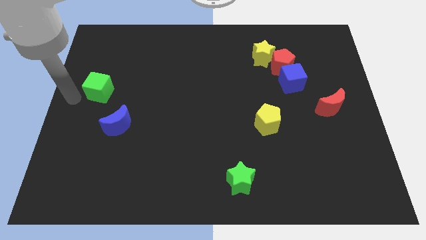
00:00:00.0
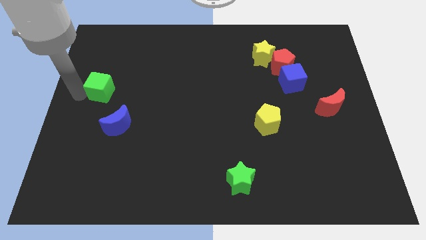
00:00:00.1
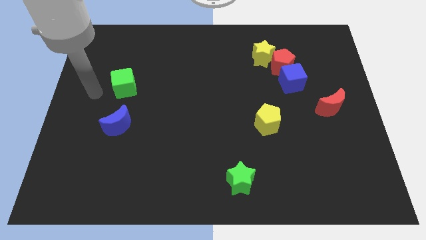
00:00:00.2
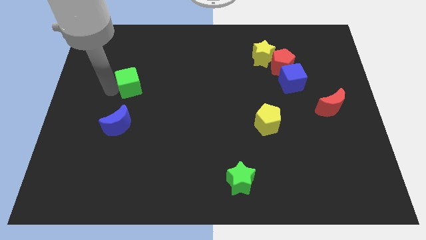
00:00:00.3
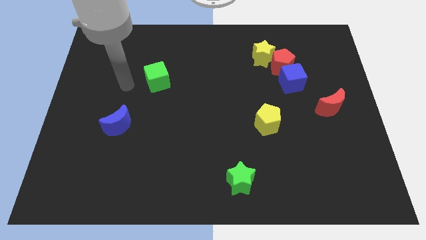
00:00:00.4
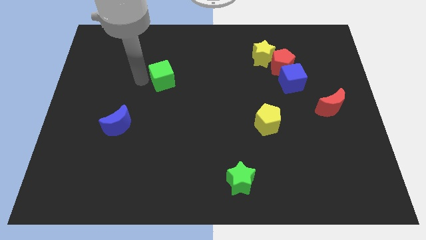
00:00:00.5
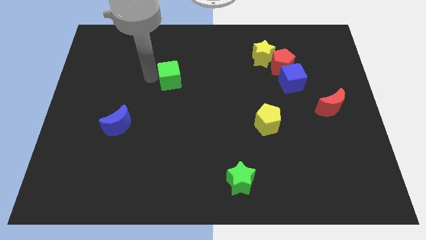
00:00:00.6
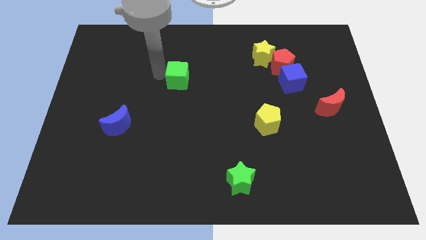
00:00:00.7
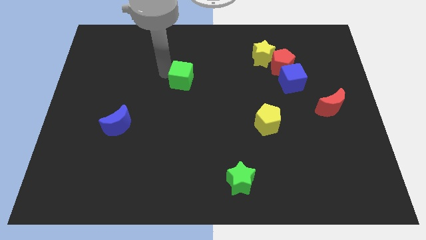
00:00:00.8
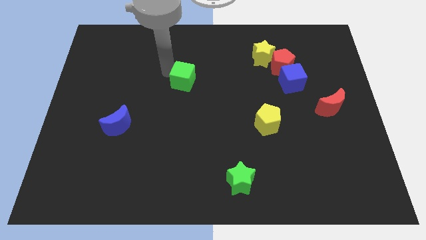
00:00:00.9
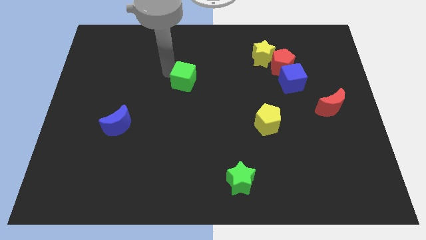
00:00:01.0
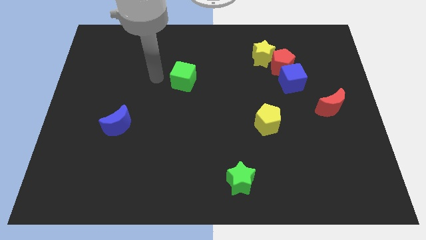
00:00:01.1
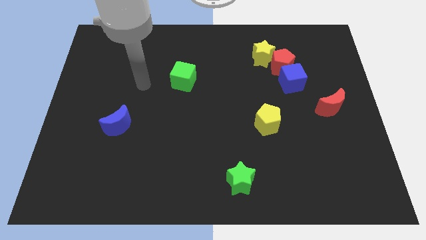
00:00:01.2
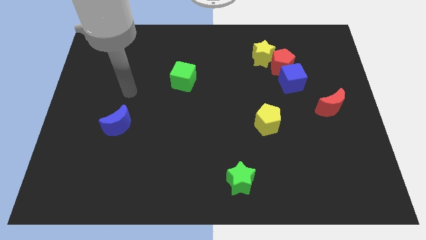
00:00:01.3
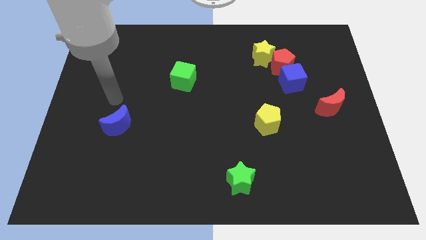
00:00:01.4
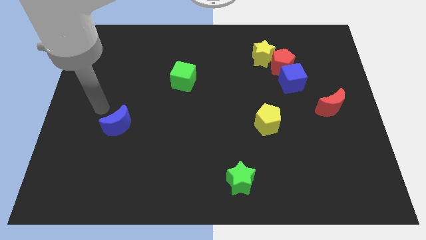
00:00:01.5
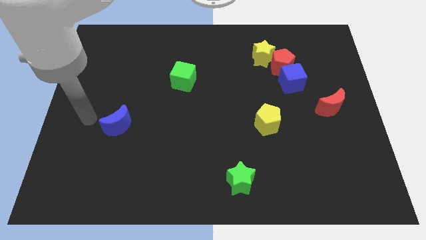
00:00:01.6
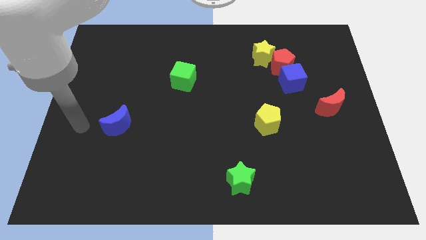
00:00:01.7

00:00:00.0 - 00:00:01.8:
push the green cube to the right side

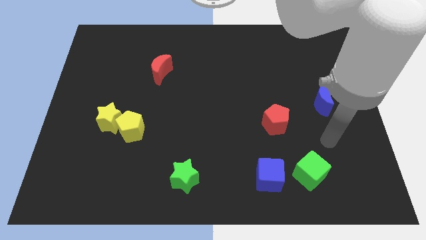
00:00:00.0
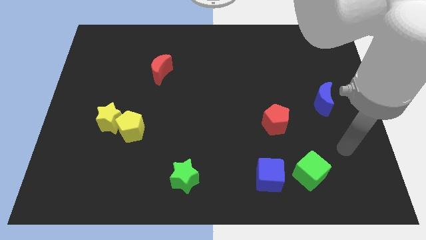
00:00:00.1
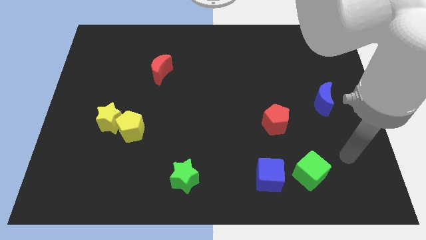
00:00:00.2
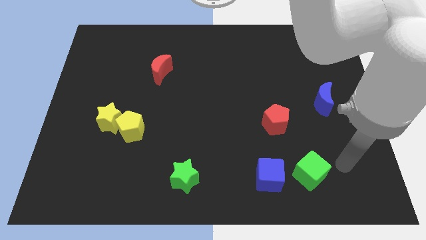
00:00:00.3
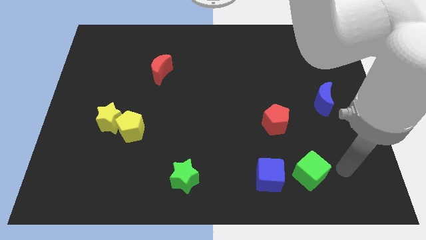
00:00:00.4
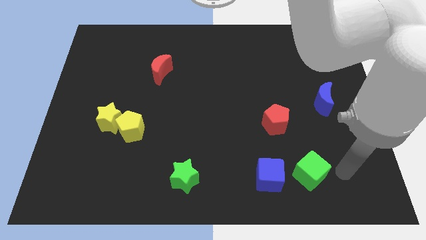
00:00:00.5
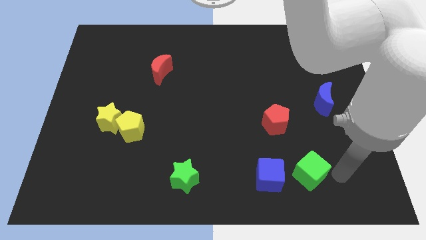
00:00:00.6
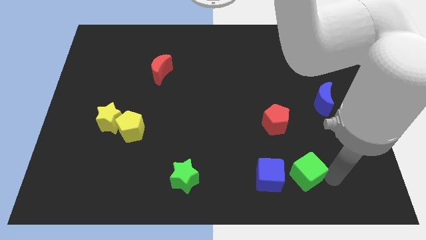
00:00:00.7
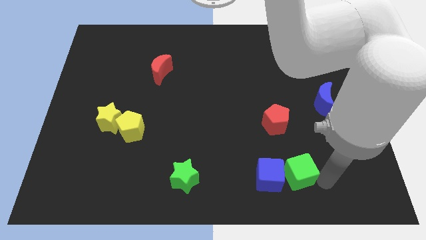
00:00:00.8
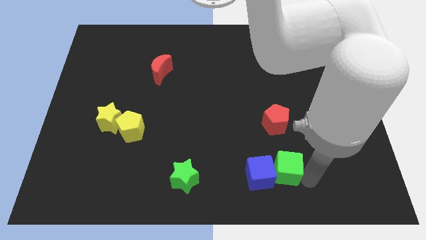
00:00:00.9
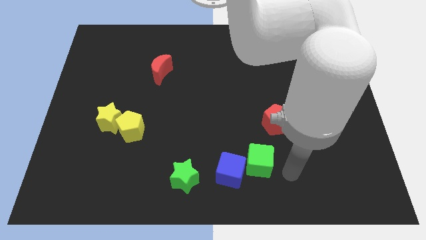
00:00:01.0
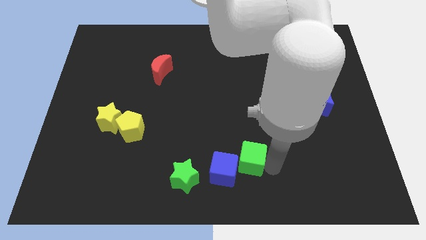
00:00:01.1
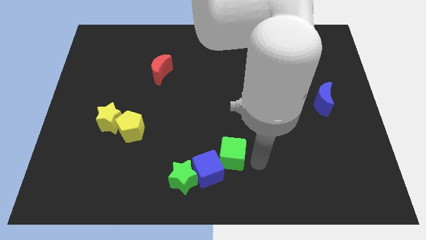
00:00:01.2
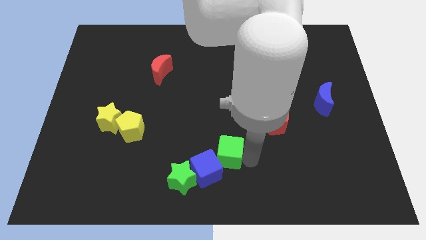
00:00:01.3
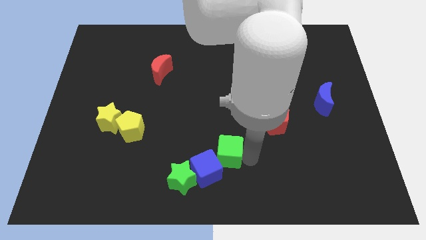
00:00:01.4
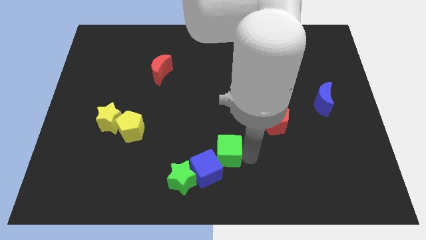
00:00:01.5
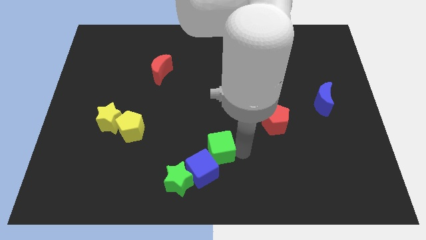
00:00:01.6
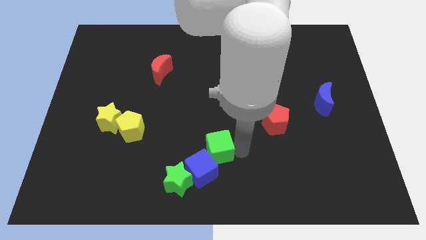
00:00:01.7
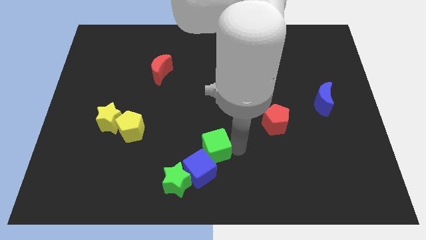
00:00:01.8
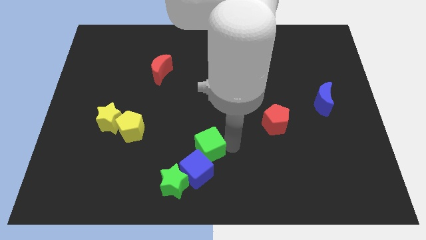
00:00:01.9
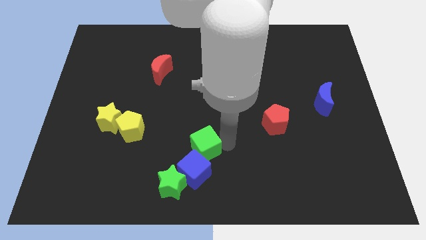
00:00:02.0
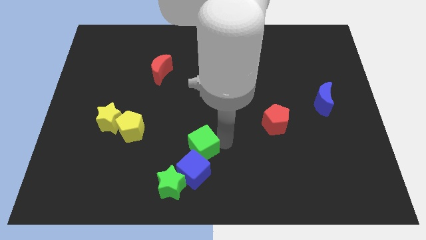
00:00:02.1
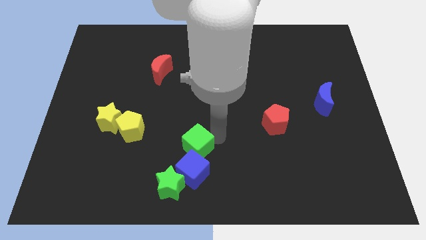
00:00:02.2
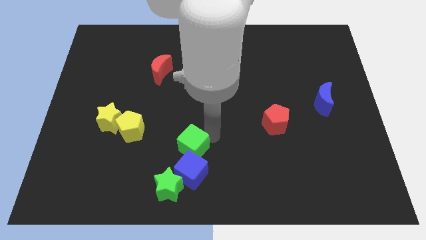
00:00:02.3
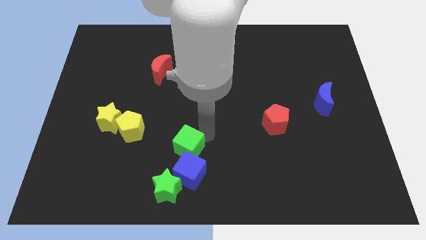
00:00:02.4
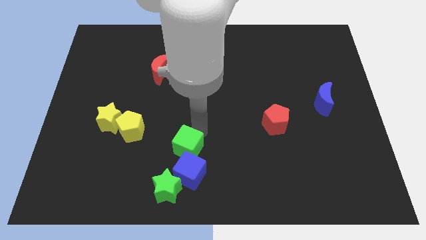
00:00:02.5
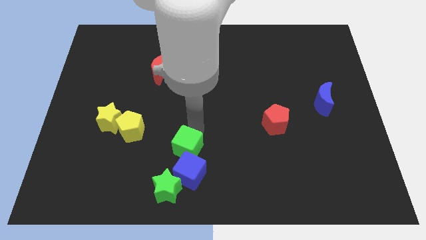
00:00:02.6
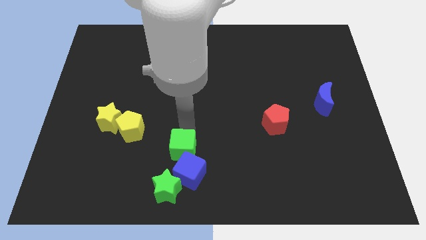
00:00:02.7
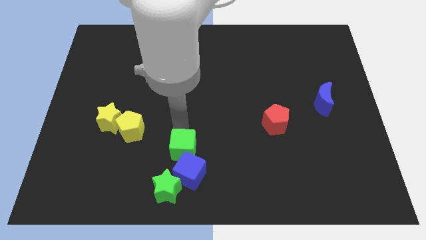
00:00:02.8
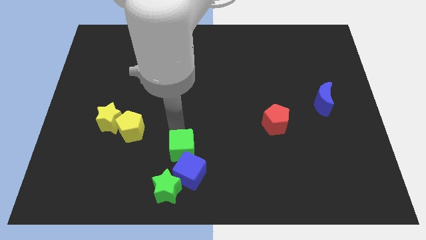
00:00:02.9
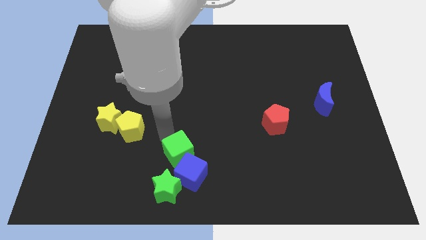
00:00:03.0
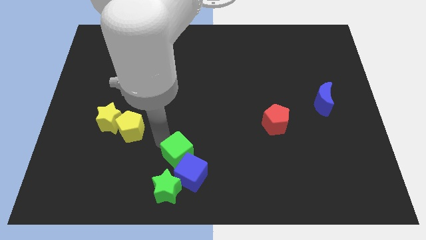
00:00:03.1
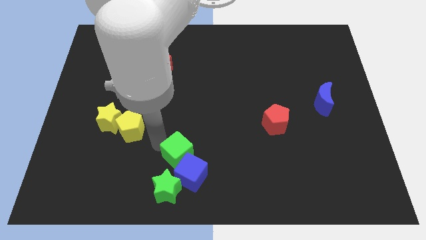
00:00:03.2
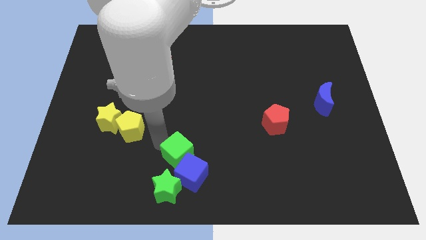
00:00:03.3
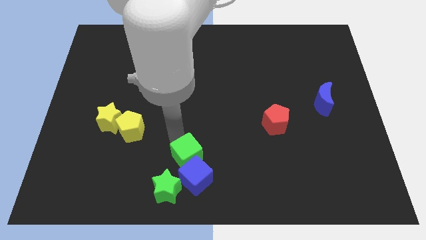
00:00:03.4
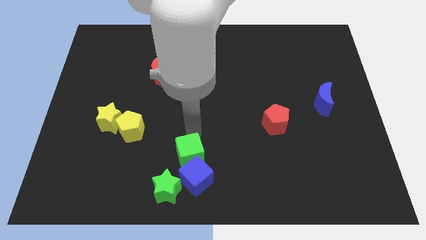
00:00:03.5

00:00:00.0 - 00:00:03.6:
push the green cube into the blue cube

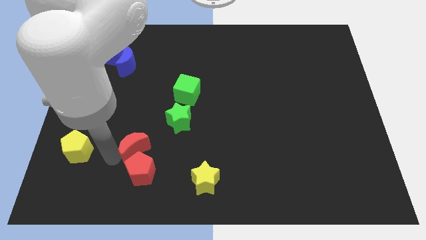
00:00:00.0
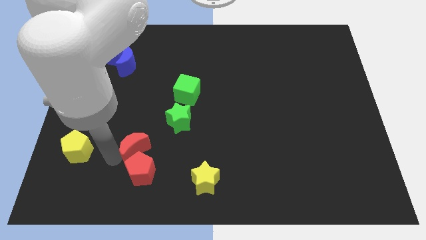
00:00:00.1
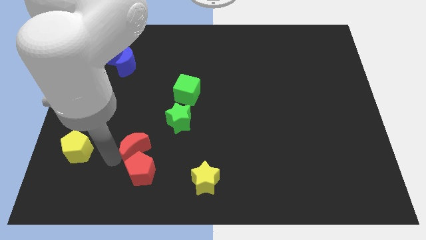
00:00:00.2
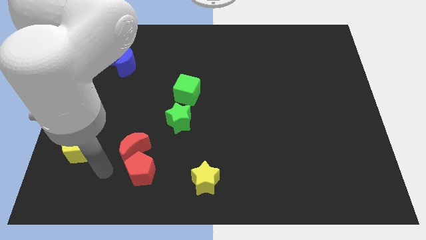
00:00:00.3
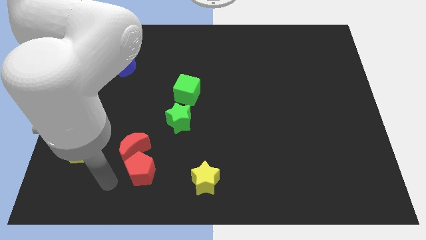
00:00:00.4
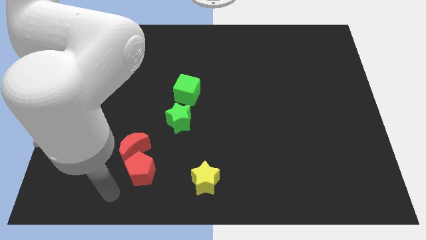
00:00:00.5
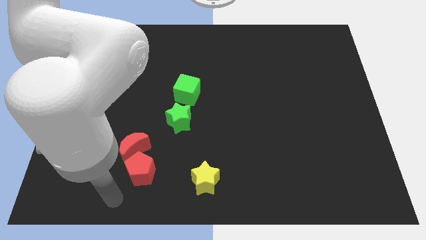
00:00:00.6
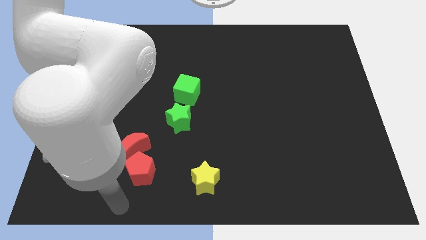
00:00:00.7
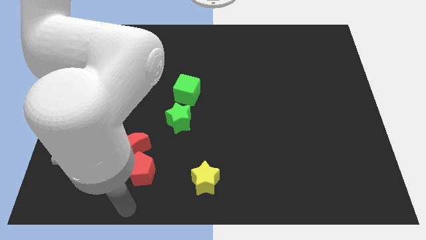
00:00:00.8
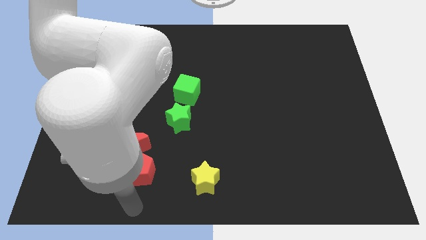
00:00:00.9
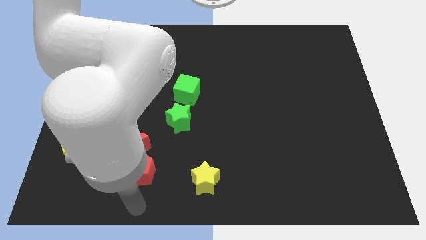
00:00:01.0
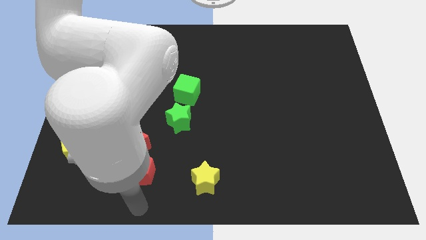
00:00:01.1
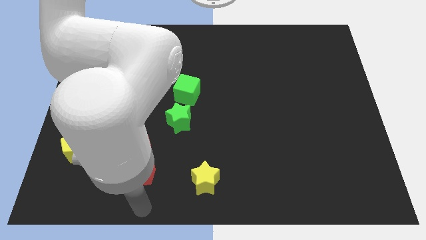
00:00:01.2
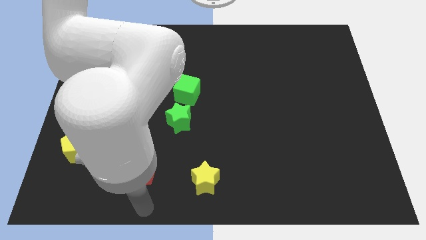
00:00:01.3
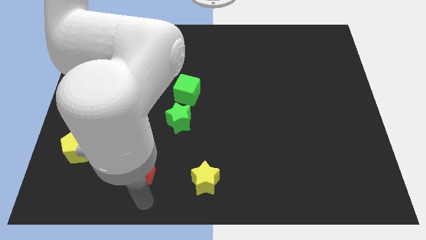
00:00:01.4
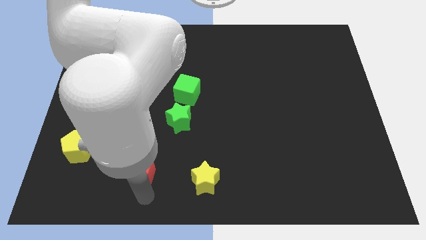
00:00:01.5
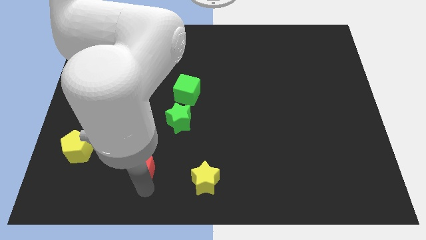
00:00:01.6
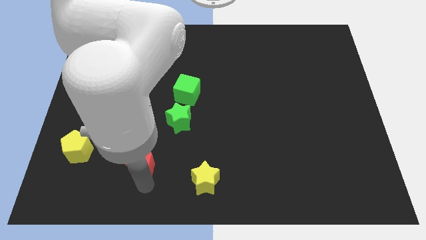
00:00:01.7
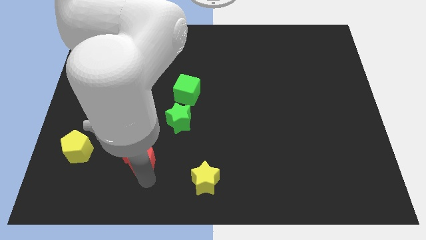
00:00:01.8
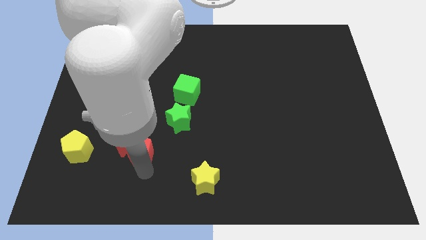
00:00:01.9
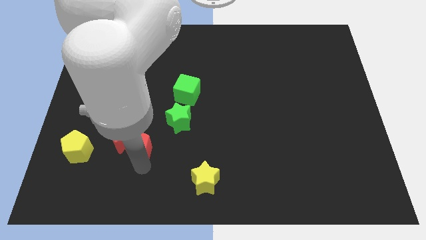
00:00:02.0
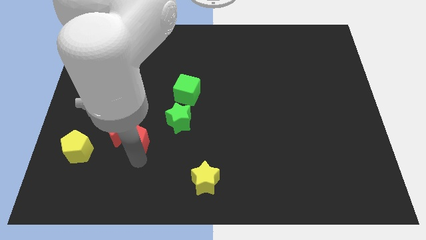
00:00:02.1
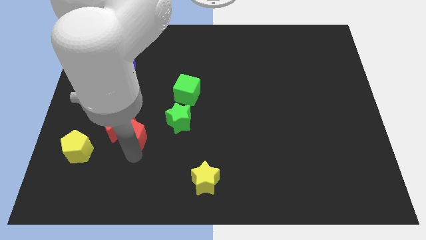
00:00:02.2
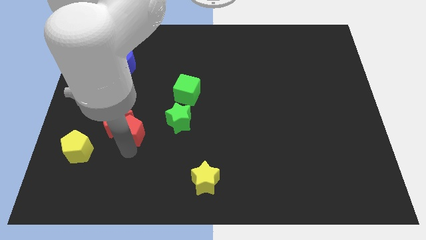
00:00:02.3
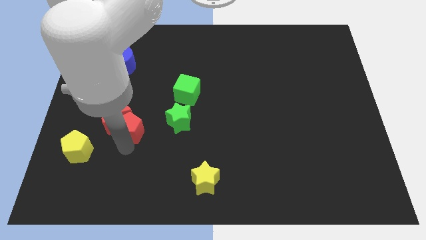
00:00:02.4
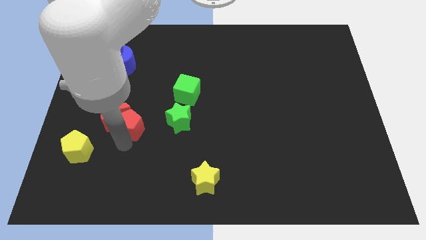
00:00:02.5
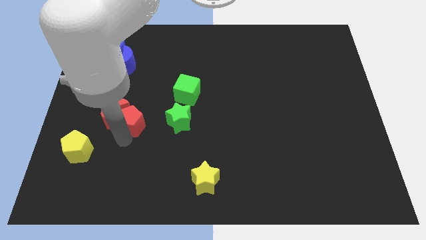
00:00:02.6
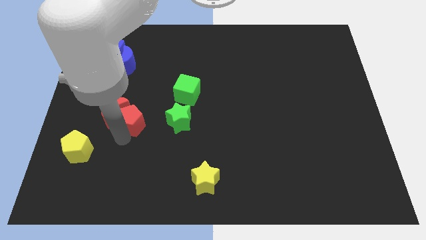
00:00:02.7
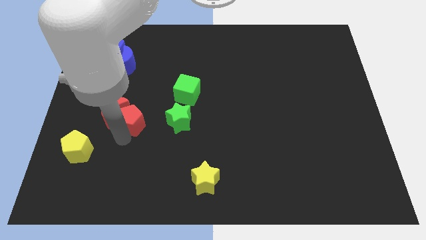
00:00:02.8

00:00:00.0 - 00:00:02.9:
slide the red pentagon parallel left of the green star

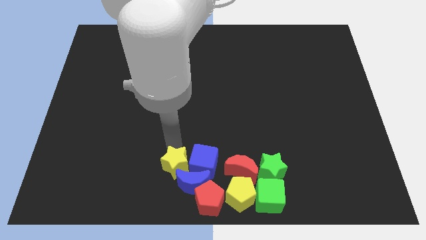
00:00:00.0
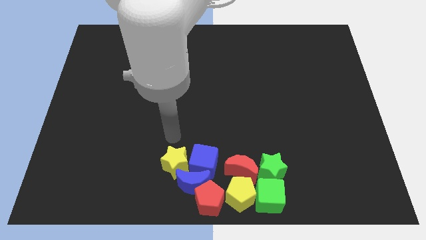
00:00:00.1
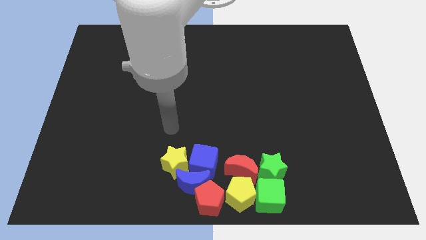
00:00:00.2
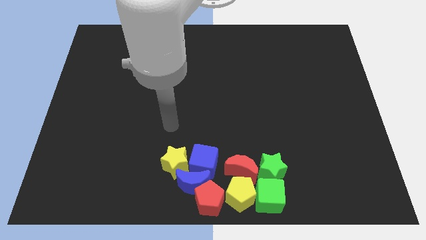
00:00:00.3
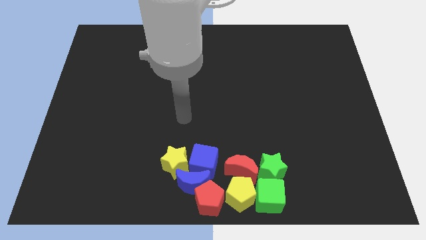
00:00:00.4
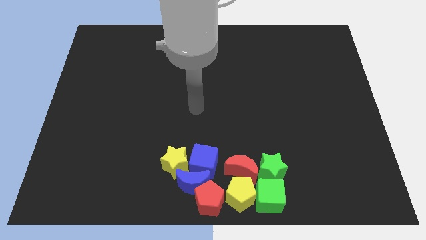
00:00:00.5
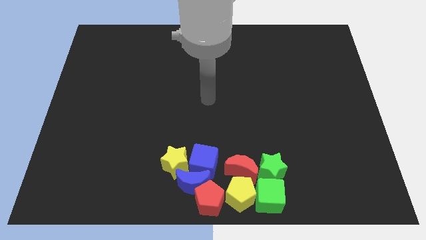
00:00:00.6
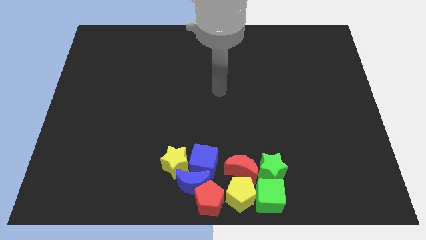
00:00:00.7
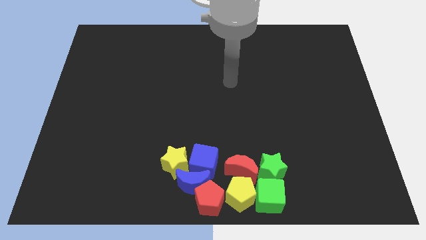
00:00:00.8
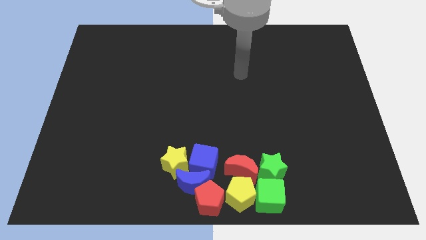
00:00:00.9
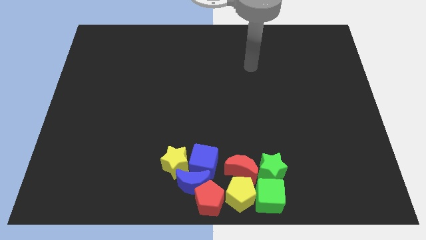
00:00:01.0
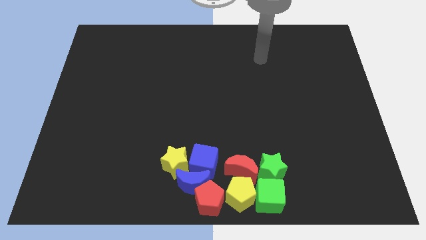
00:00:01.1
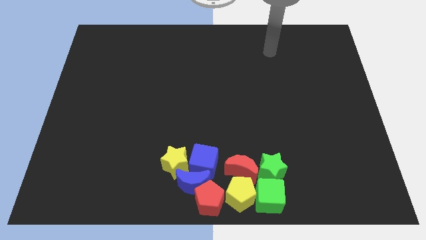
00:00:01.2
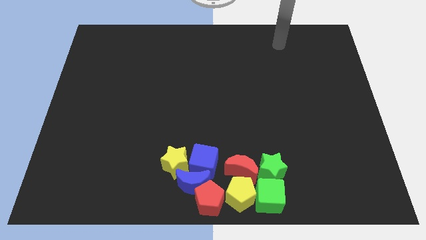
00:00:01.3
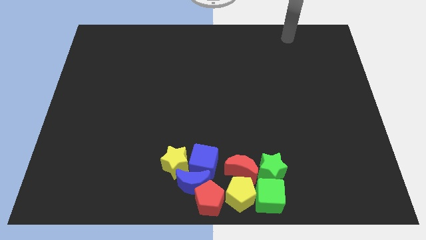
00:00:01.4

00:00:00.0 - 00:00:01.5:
slide your hand diagonally towards the top right
